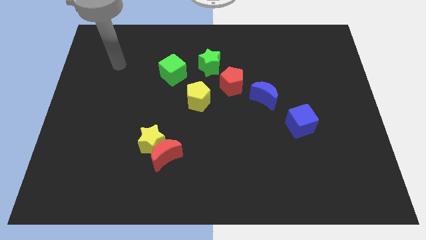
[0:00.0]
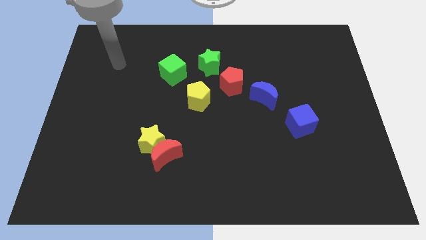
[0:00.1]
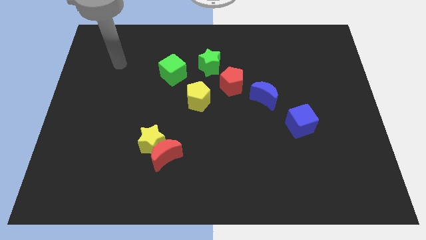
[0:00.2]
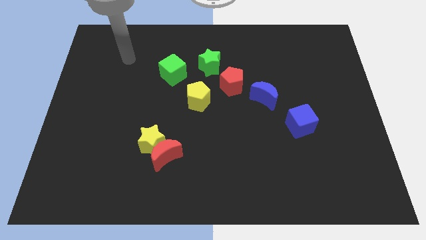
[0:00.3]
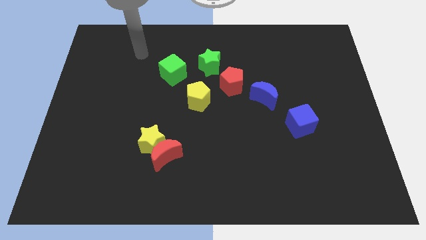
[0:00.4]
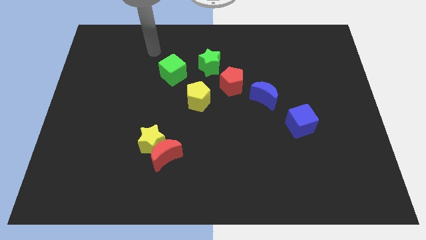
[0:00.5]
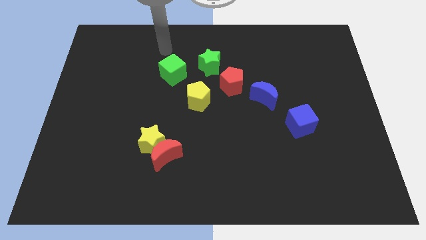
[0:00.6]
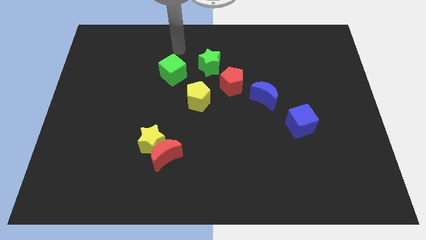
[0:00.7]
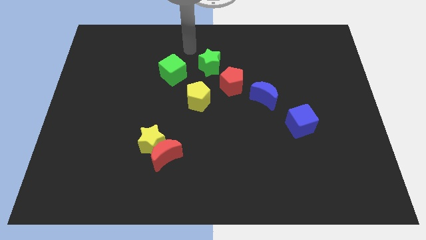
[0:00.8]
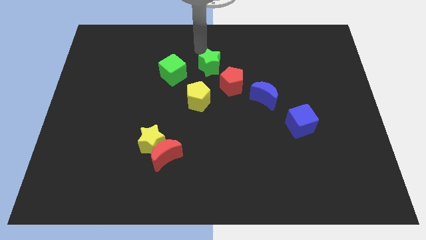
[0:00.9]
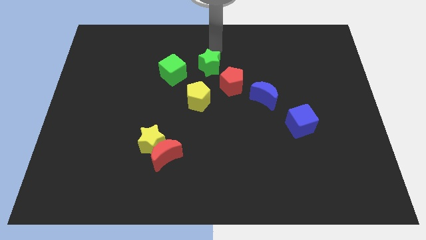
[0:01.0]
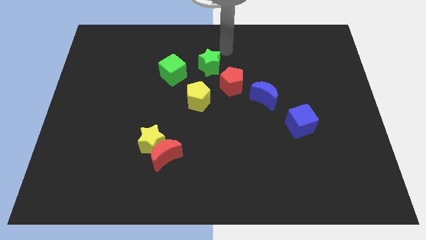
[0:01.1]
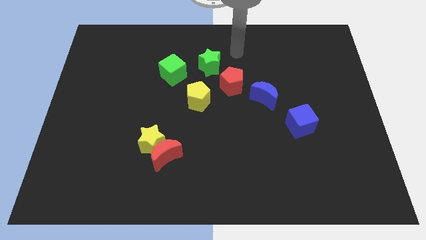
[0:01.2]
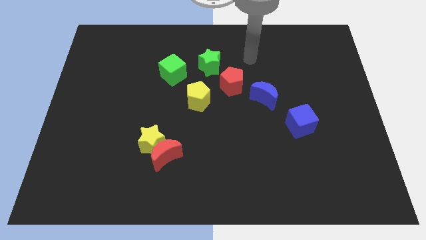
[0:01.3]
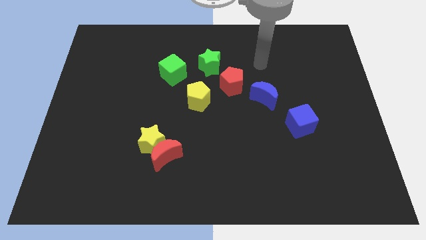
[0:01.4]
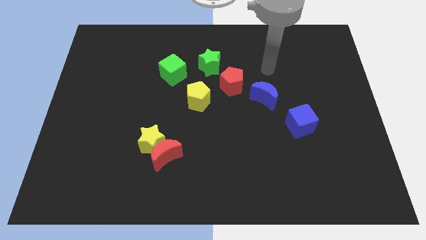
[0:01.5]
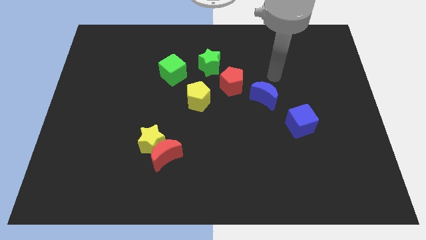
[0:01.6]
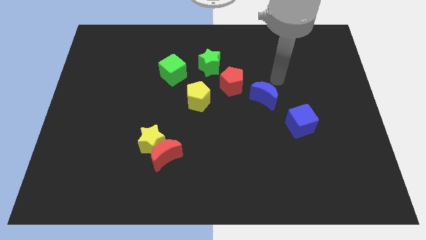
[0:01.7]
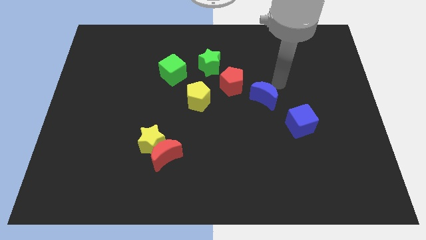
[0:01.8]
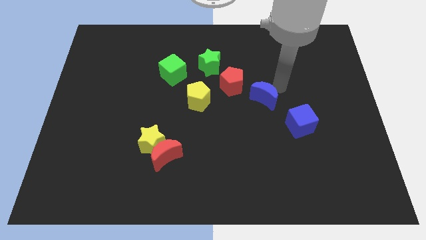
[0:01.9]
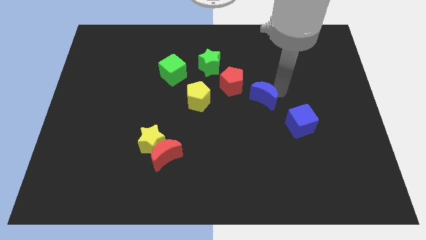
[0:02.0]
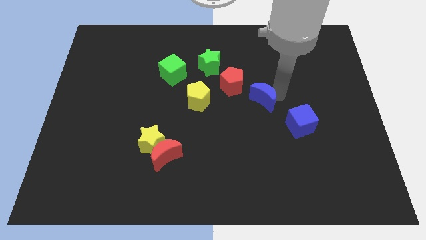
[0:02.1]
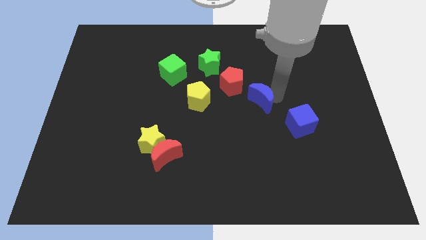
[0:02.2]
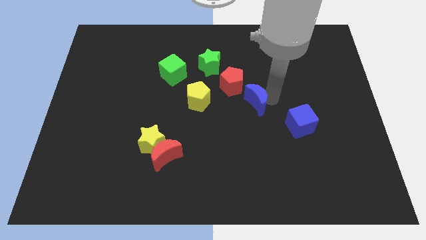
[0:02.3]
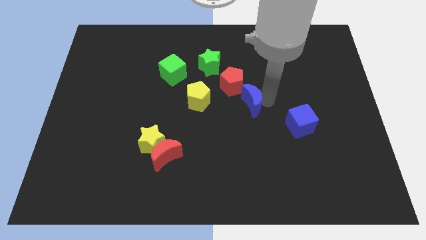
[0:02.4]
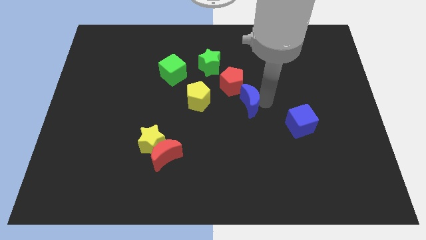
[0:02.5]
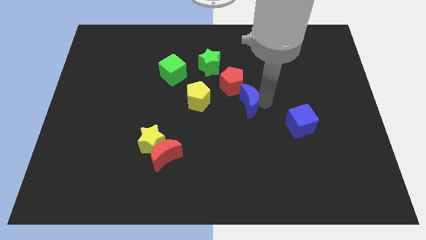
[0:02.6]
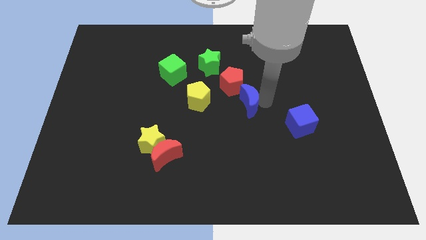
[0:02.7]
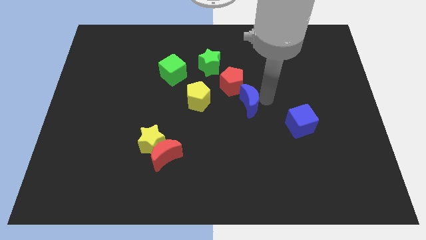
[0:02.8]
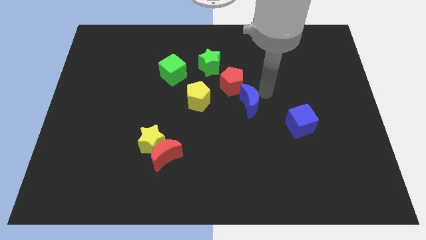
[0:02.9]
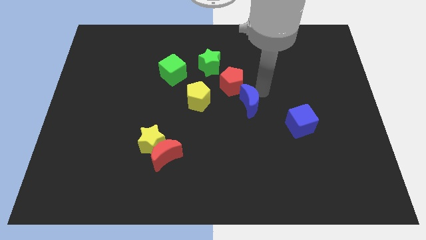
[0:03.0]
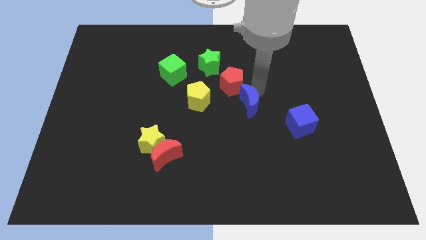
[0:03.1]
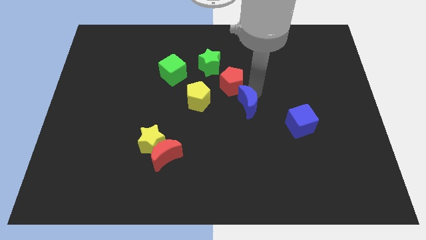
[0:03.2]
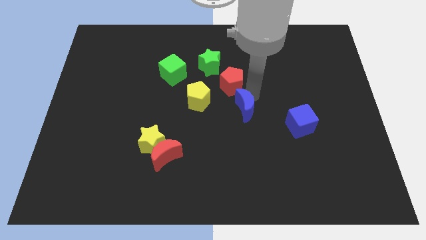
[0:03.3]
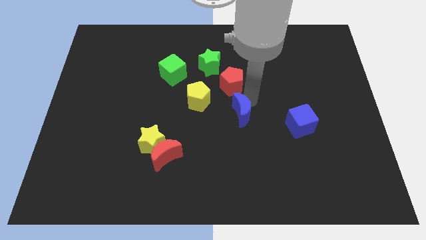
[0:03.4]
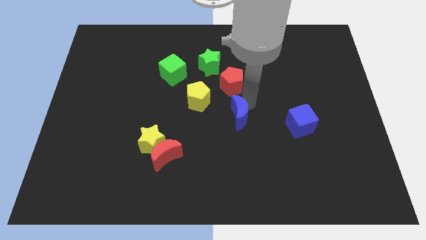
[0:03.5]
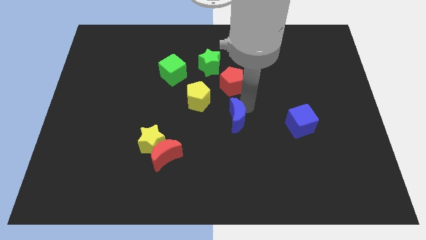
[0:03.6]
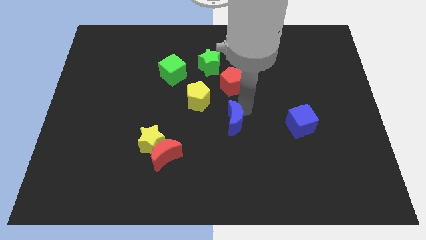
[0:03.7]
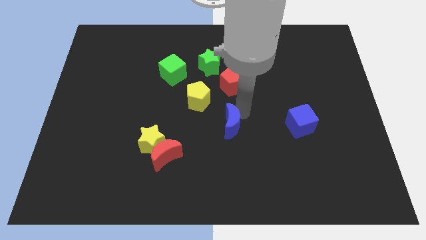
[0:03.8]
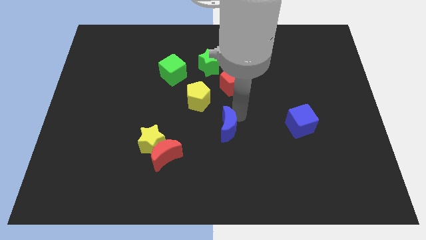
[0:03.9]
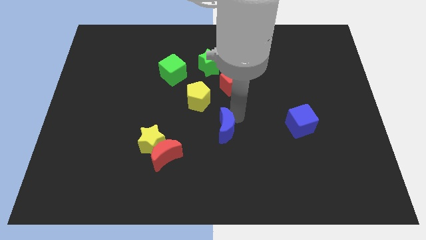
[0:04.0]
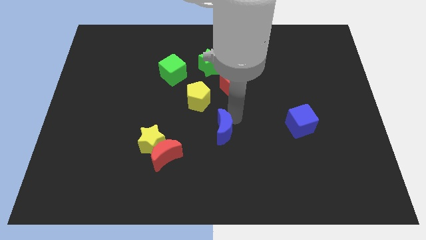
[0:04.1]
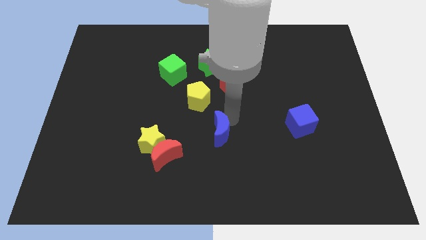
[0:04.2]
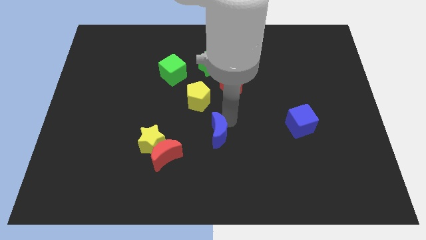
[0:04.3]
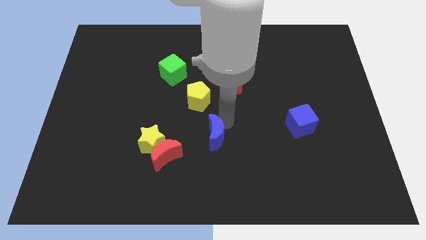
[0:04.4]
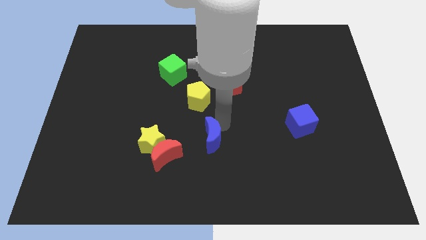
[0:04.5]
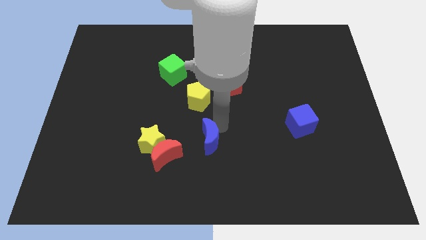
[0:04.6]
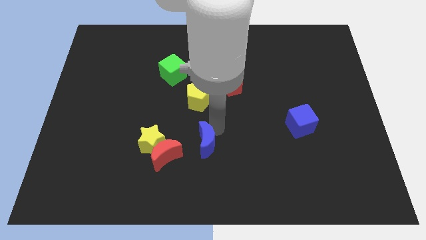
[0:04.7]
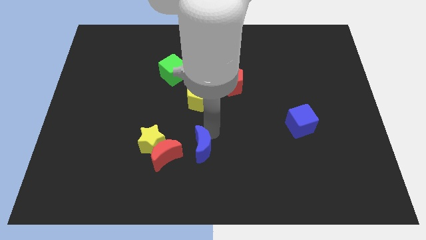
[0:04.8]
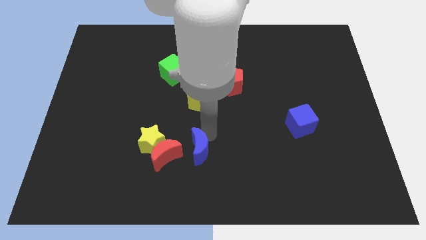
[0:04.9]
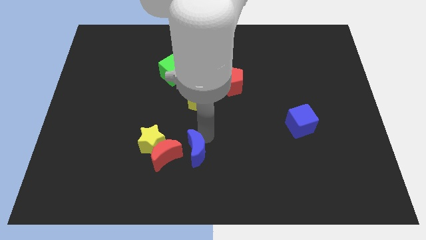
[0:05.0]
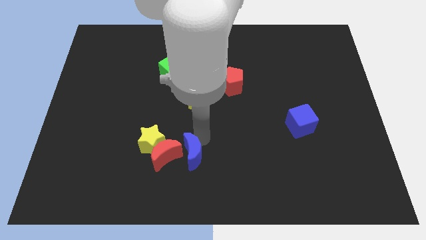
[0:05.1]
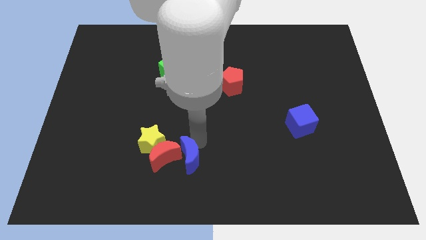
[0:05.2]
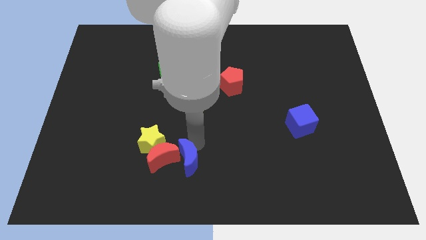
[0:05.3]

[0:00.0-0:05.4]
move the blue moon close to the red moon

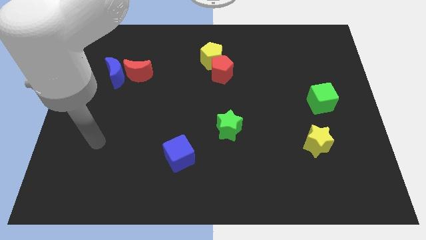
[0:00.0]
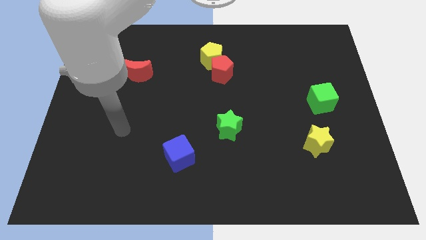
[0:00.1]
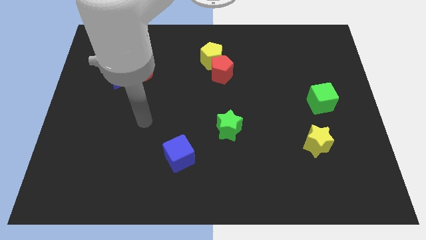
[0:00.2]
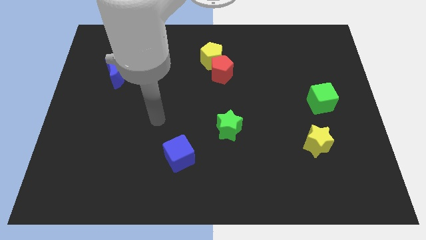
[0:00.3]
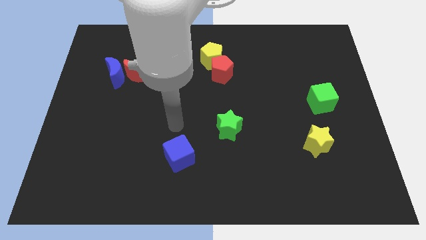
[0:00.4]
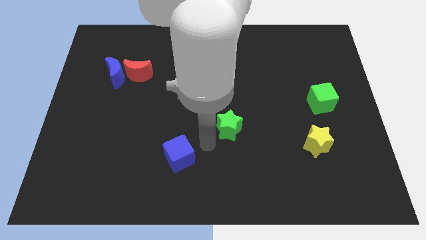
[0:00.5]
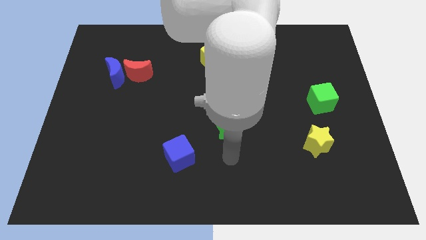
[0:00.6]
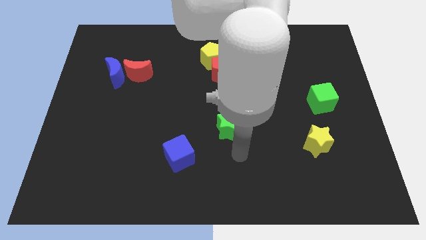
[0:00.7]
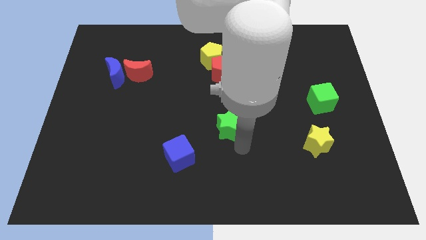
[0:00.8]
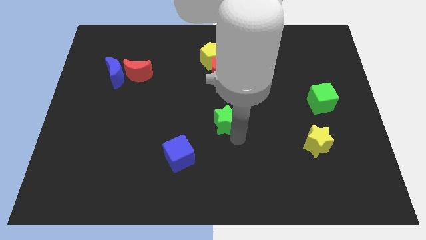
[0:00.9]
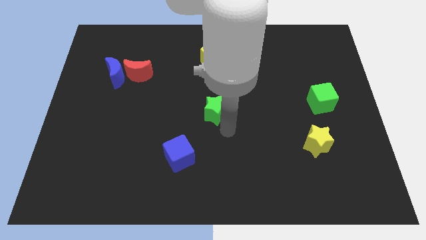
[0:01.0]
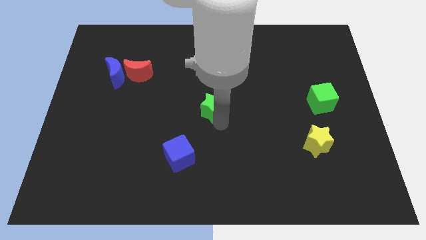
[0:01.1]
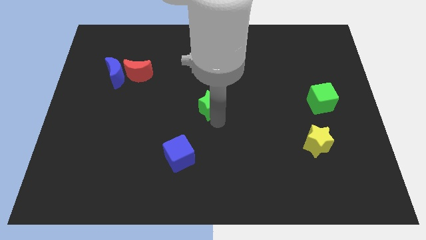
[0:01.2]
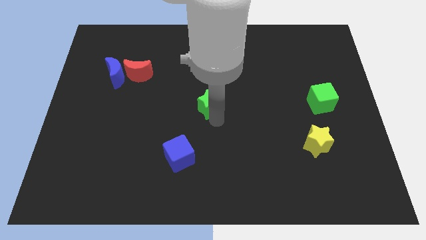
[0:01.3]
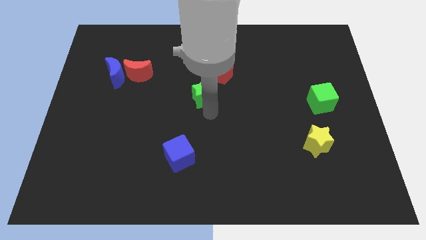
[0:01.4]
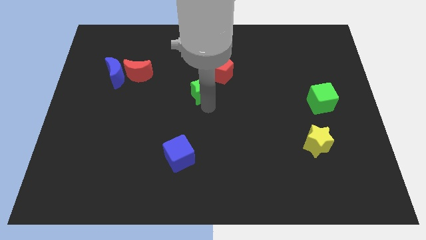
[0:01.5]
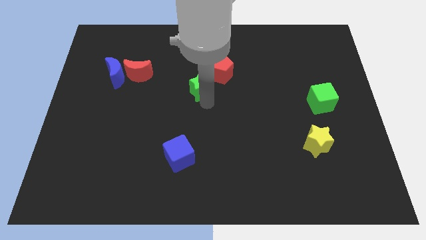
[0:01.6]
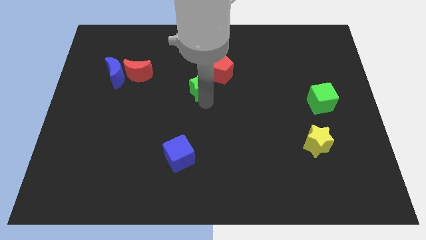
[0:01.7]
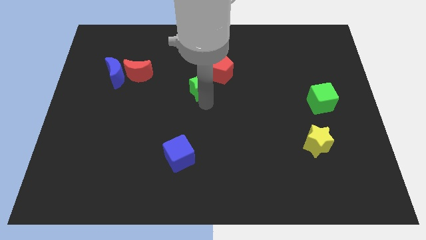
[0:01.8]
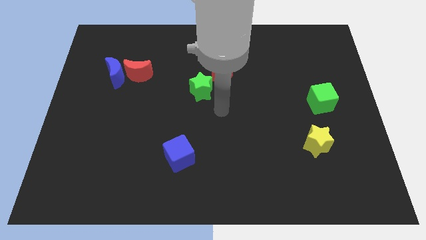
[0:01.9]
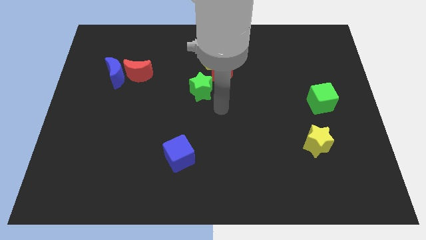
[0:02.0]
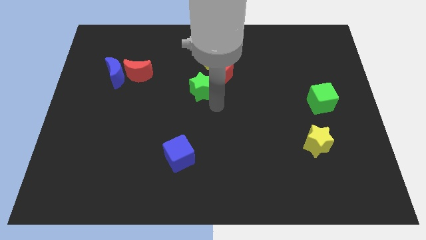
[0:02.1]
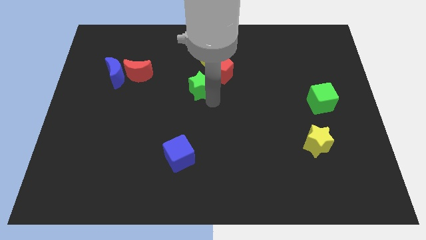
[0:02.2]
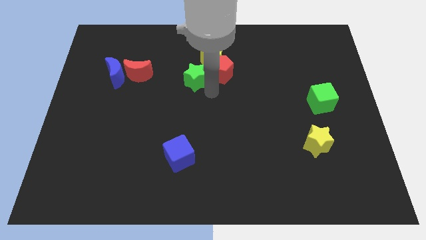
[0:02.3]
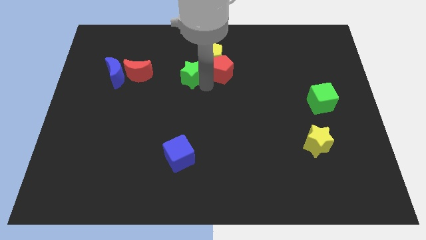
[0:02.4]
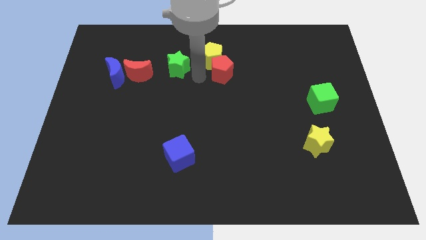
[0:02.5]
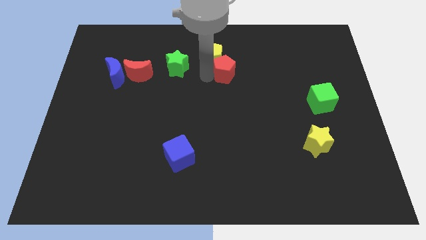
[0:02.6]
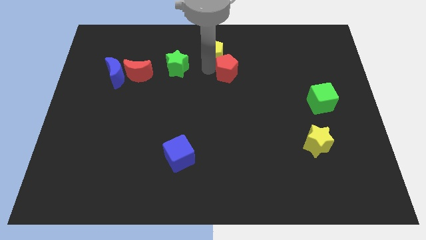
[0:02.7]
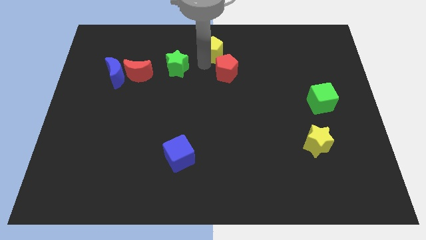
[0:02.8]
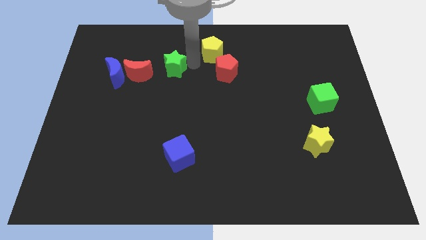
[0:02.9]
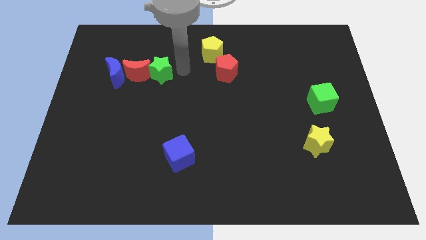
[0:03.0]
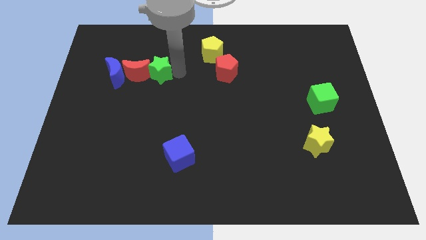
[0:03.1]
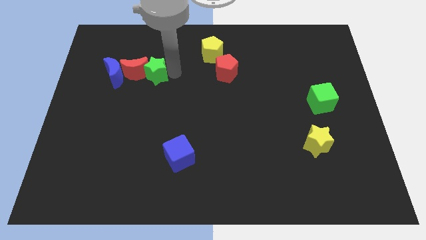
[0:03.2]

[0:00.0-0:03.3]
put the green star close to the red moon
